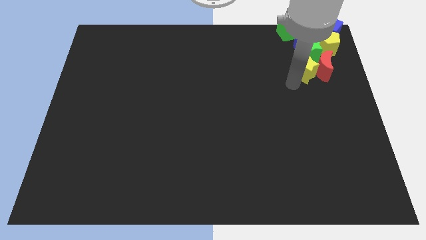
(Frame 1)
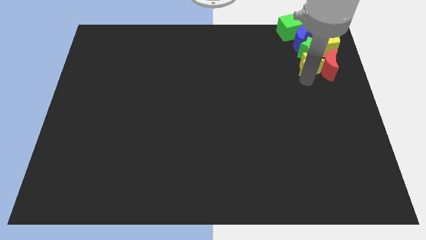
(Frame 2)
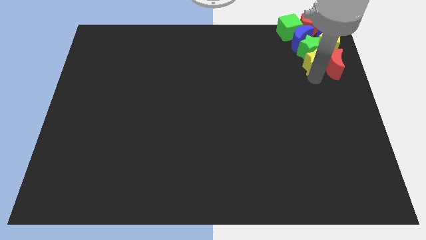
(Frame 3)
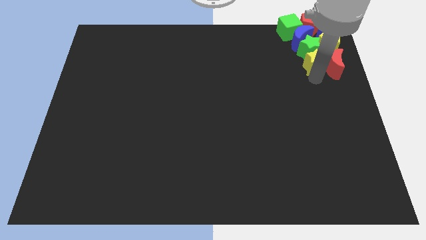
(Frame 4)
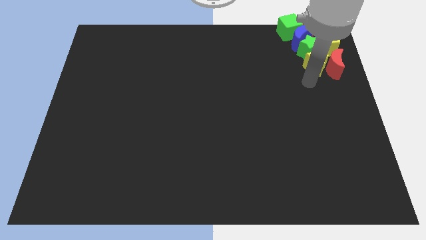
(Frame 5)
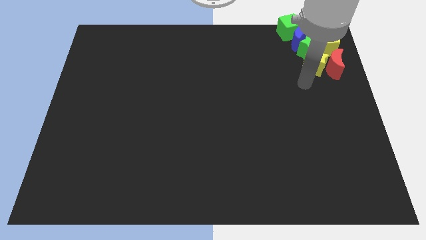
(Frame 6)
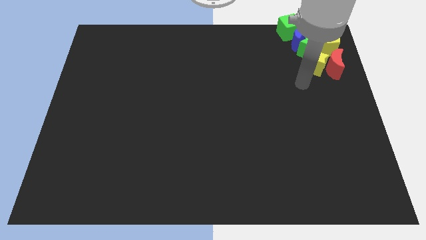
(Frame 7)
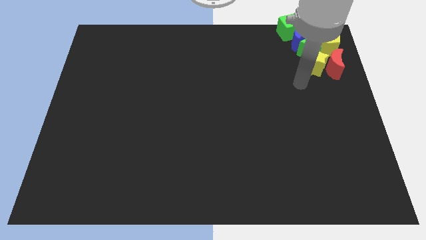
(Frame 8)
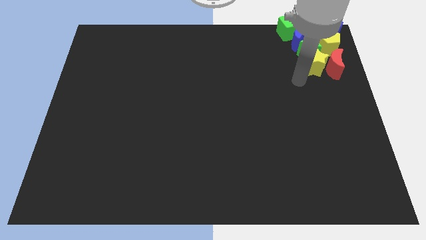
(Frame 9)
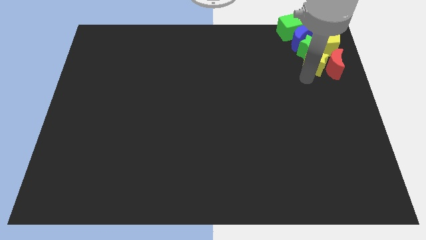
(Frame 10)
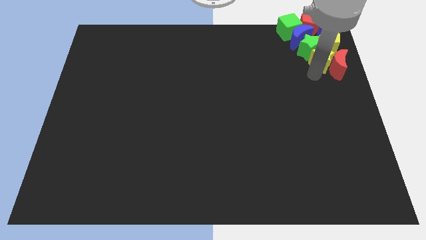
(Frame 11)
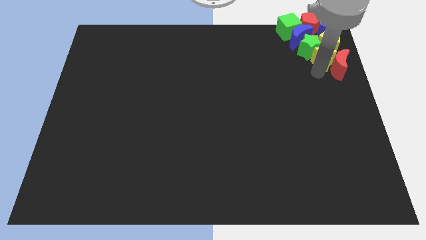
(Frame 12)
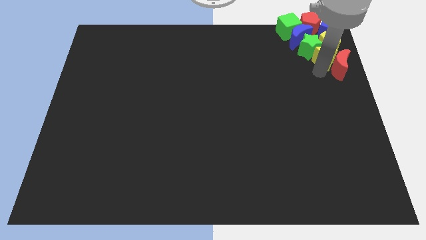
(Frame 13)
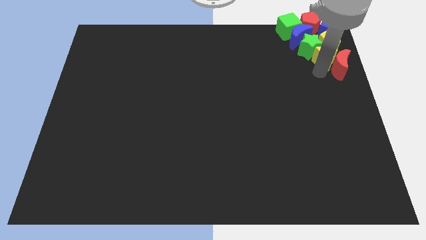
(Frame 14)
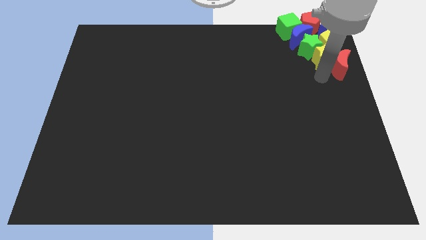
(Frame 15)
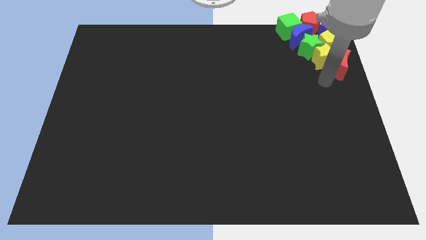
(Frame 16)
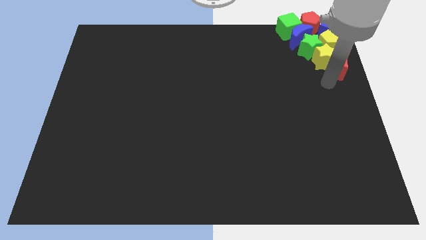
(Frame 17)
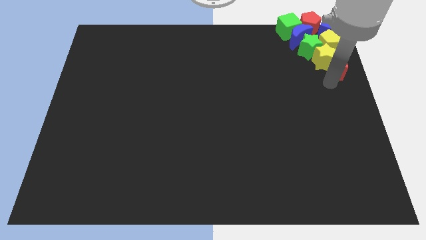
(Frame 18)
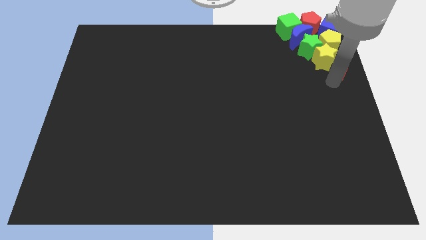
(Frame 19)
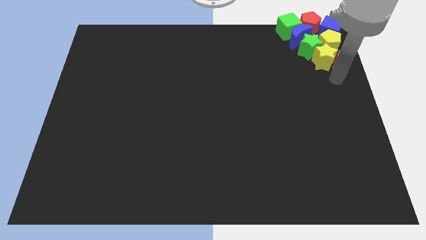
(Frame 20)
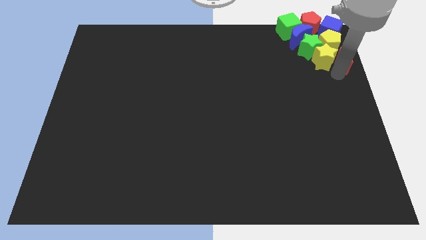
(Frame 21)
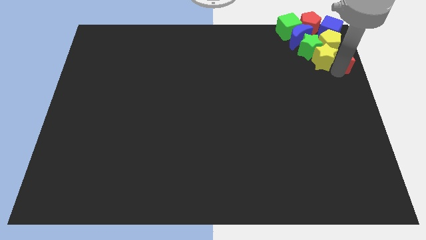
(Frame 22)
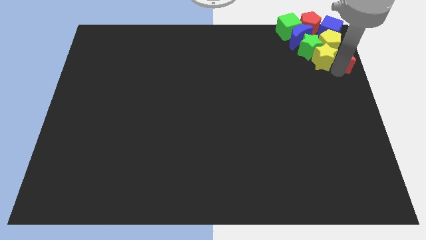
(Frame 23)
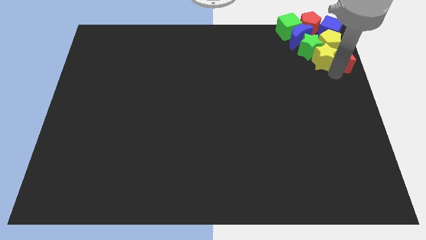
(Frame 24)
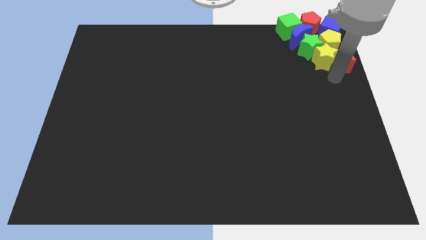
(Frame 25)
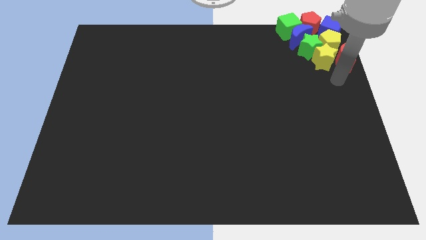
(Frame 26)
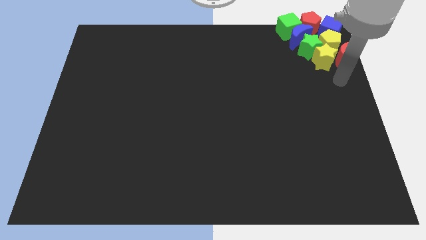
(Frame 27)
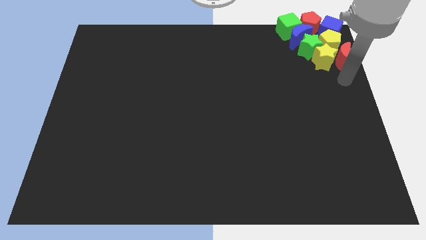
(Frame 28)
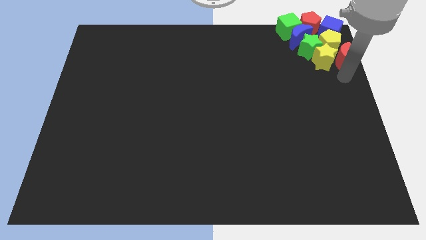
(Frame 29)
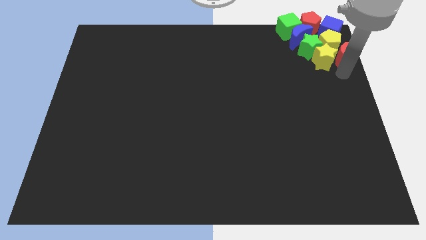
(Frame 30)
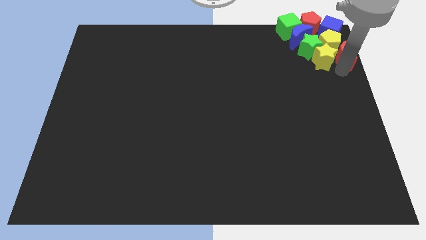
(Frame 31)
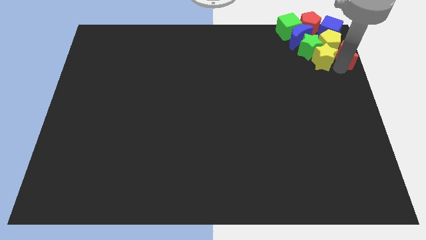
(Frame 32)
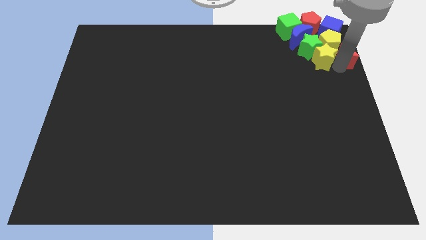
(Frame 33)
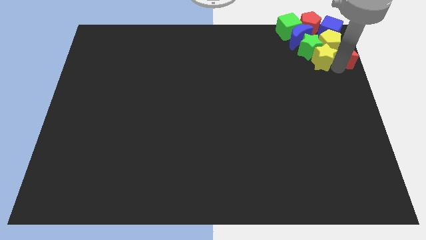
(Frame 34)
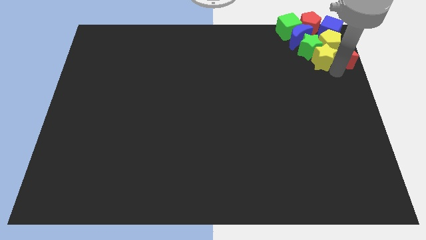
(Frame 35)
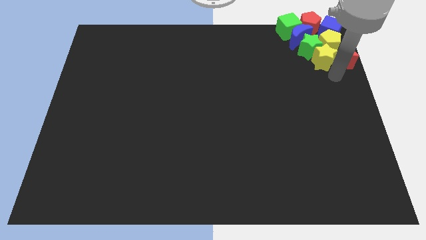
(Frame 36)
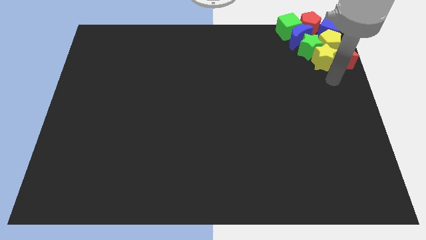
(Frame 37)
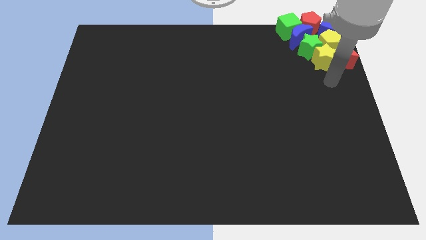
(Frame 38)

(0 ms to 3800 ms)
place the yellow star below the yellow pentagon

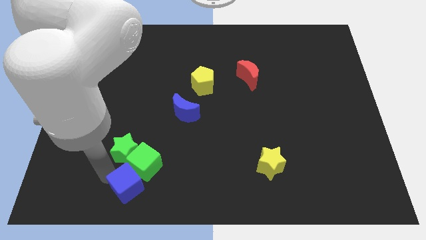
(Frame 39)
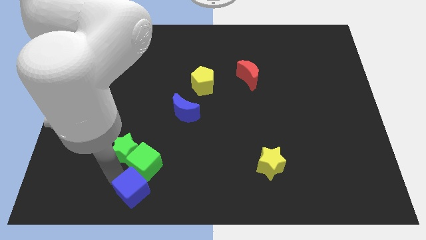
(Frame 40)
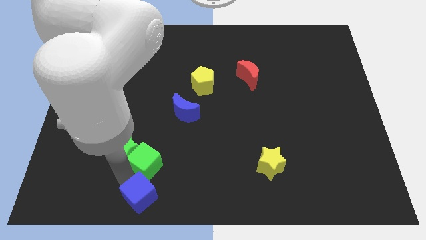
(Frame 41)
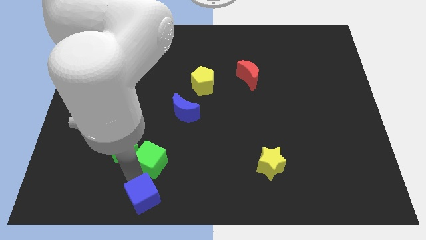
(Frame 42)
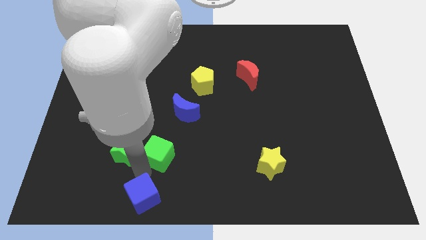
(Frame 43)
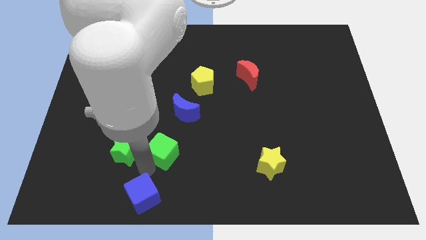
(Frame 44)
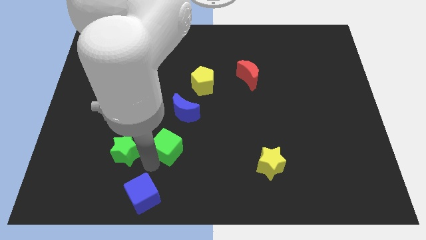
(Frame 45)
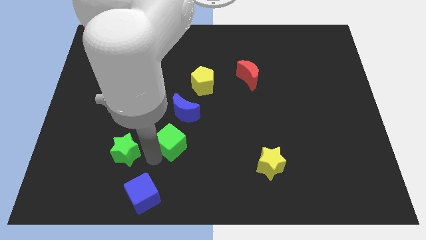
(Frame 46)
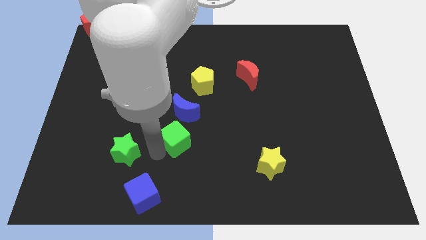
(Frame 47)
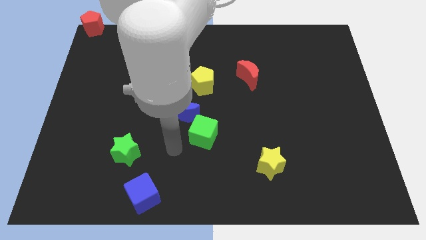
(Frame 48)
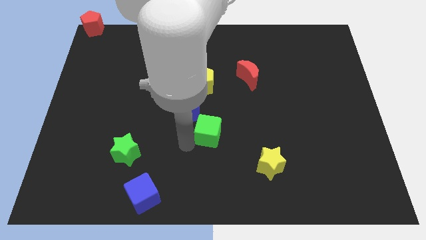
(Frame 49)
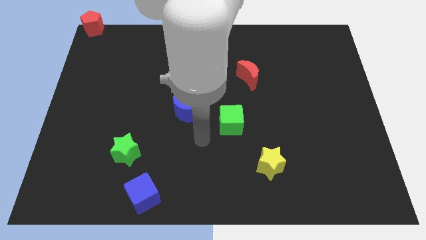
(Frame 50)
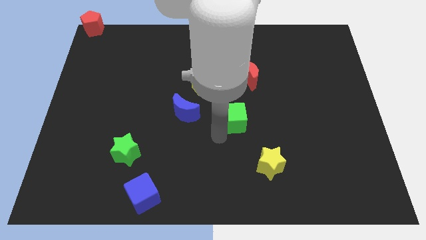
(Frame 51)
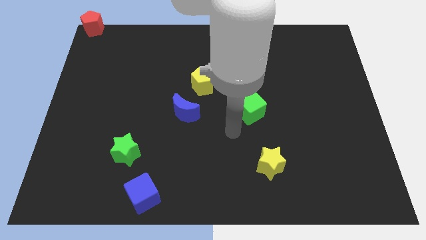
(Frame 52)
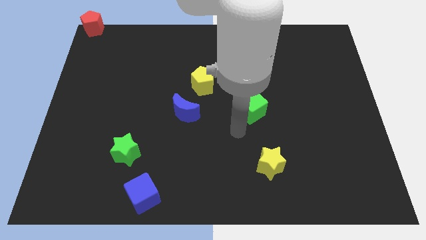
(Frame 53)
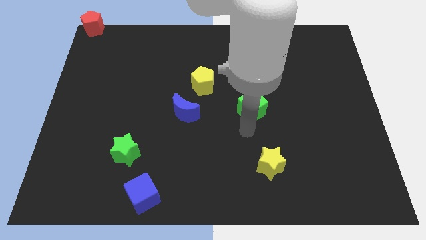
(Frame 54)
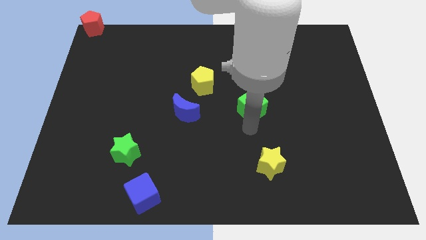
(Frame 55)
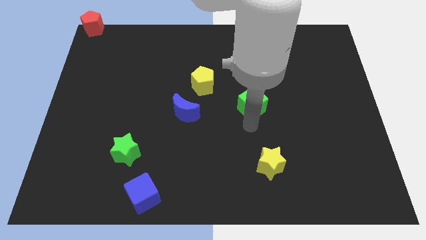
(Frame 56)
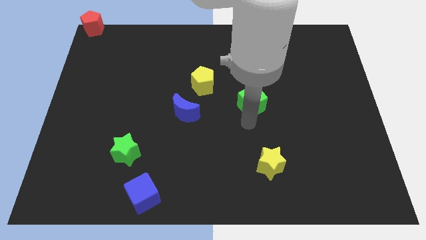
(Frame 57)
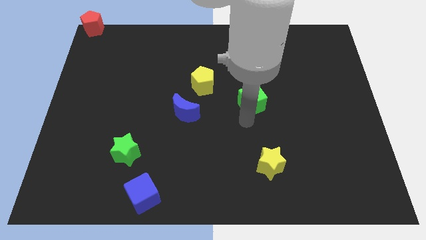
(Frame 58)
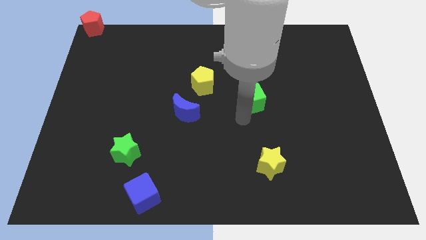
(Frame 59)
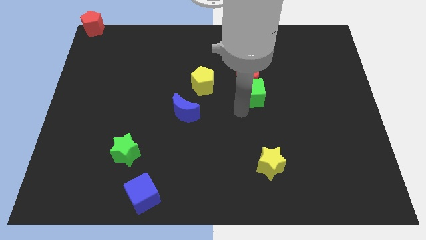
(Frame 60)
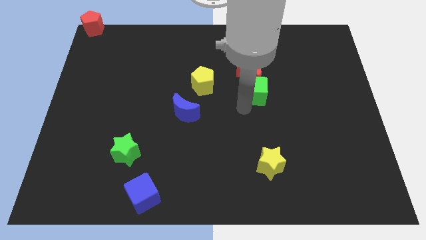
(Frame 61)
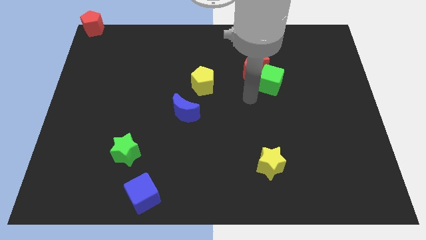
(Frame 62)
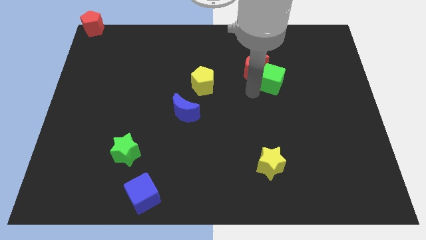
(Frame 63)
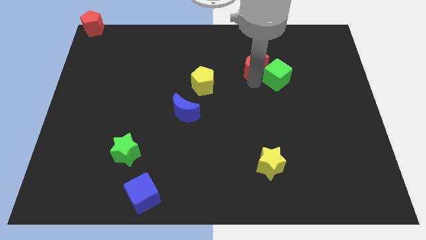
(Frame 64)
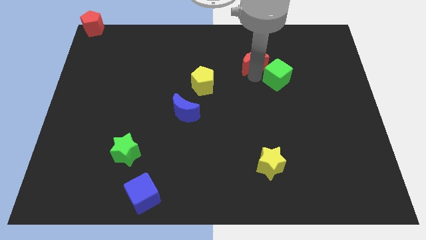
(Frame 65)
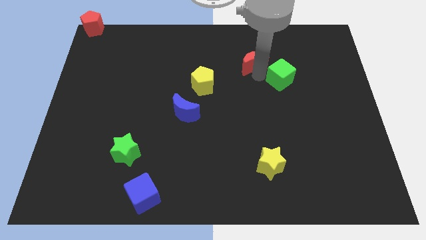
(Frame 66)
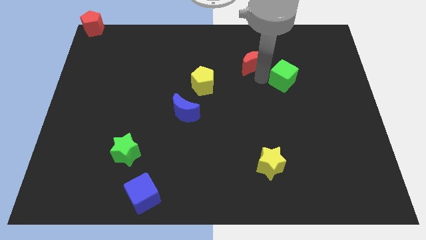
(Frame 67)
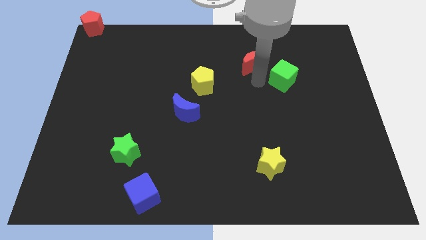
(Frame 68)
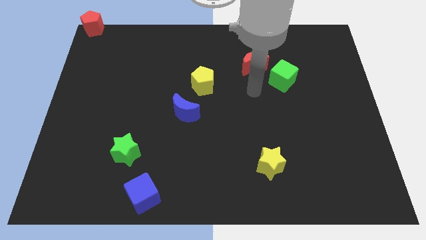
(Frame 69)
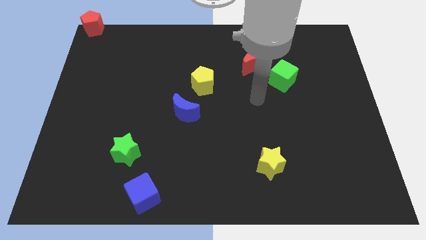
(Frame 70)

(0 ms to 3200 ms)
move the green cube to the top of the board

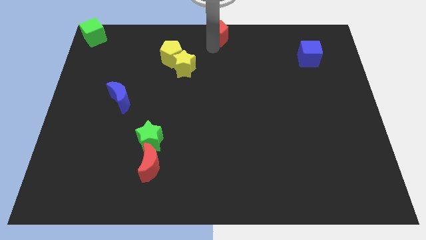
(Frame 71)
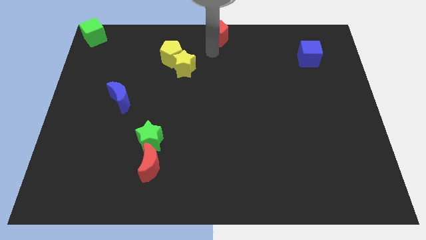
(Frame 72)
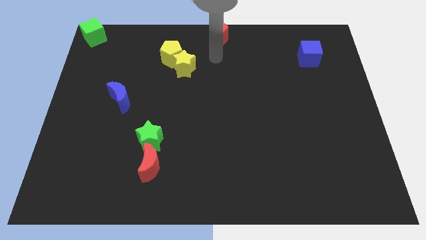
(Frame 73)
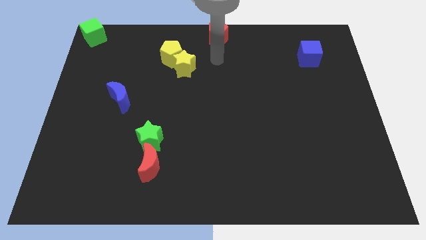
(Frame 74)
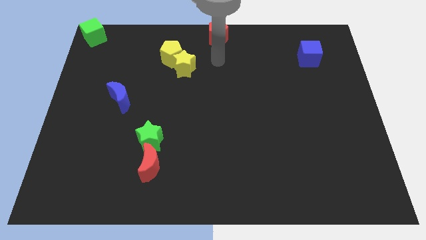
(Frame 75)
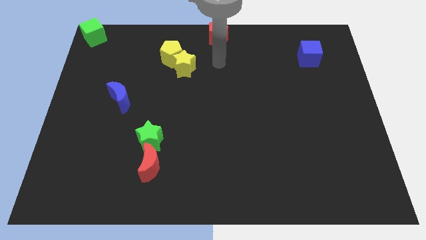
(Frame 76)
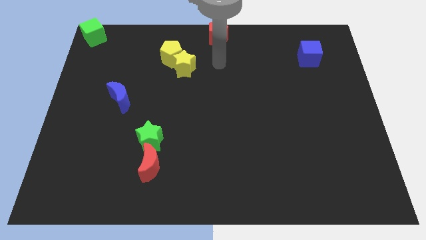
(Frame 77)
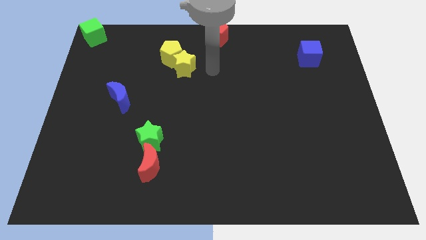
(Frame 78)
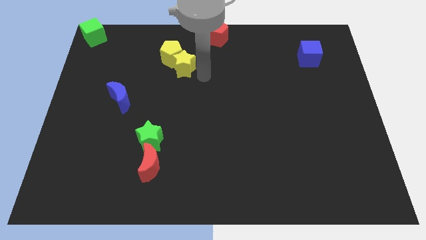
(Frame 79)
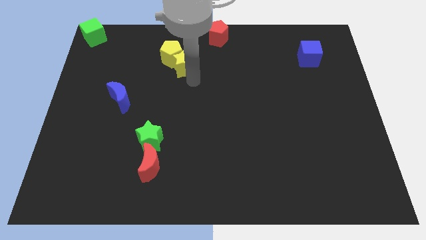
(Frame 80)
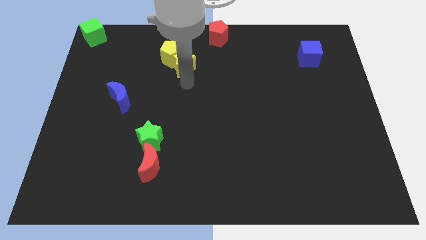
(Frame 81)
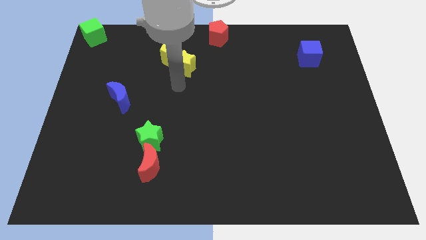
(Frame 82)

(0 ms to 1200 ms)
point your arm at the bottom of yellow star

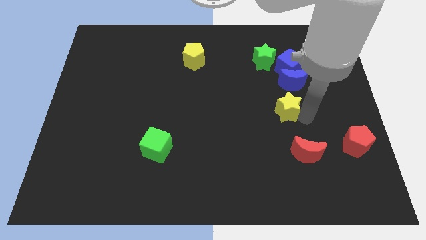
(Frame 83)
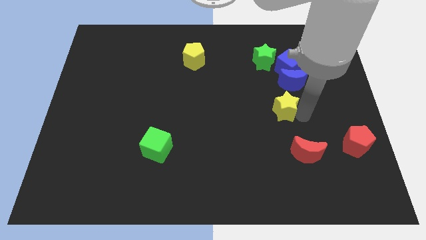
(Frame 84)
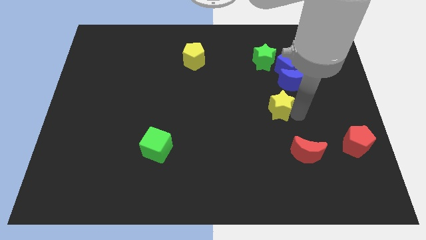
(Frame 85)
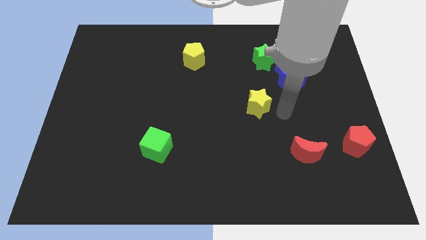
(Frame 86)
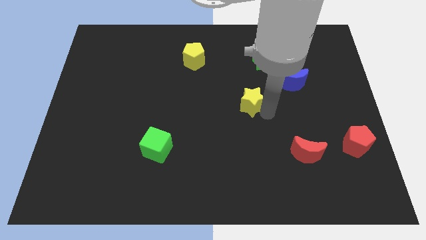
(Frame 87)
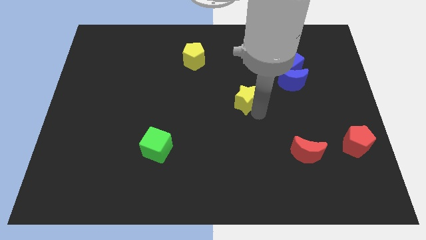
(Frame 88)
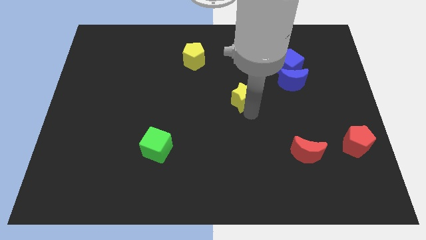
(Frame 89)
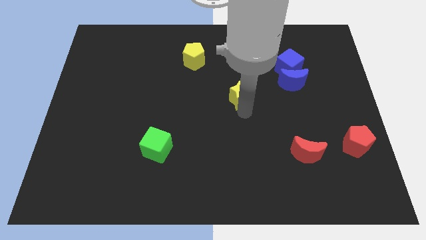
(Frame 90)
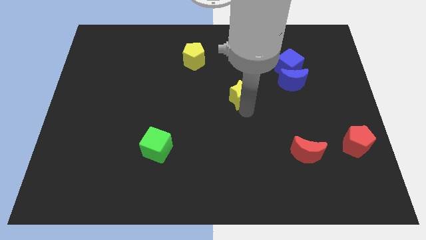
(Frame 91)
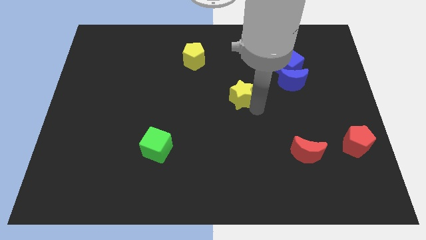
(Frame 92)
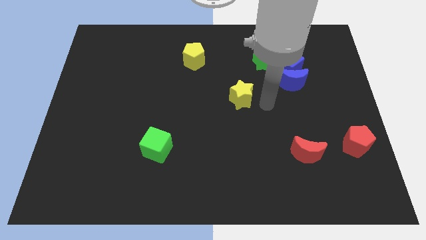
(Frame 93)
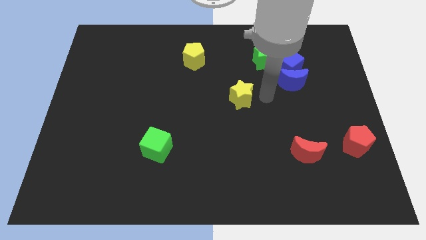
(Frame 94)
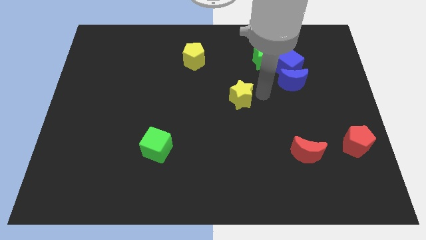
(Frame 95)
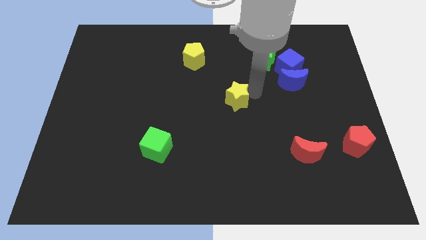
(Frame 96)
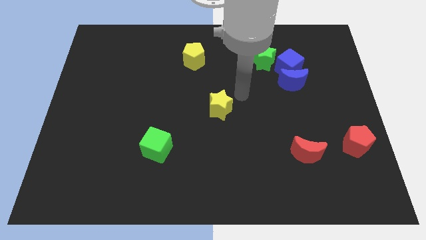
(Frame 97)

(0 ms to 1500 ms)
place the yellow star at the center of the board
